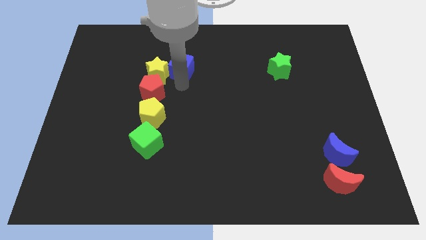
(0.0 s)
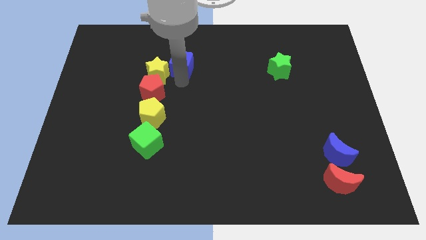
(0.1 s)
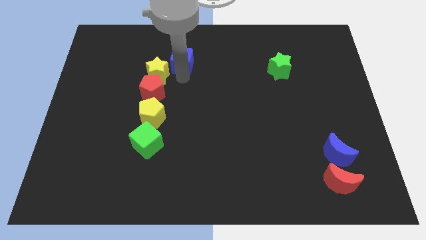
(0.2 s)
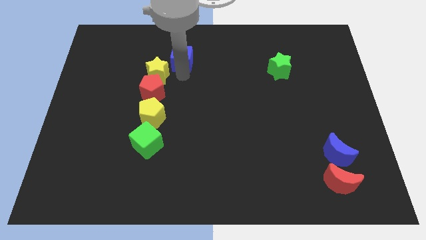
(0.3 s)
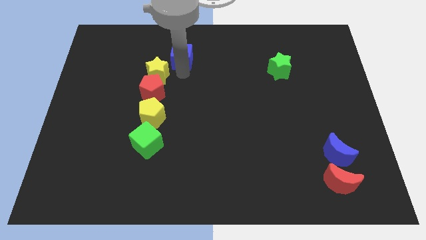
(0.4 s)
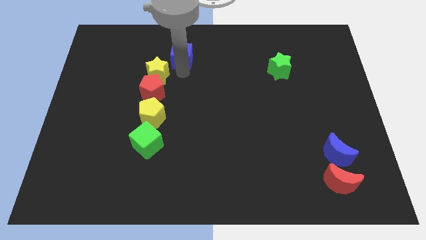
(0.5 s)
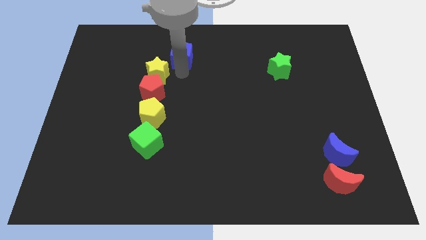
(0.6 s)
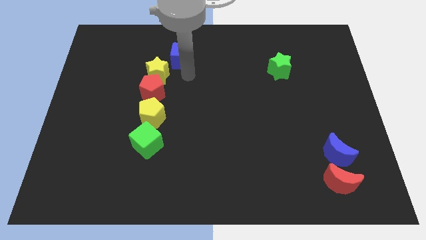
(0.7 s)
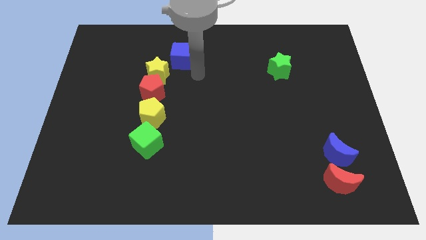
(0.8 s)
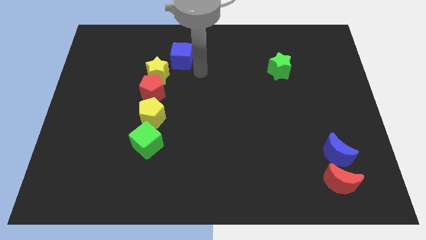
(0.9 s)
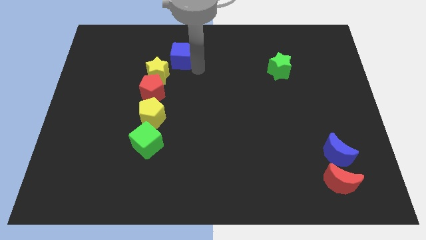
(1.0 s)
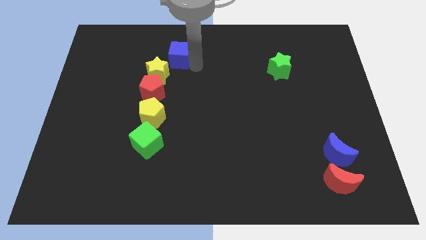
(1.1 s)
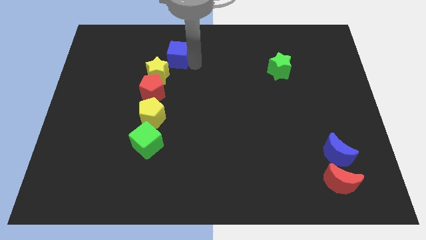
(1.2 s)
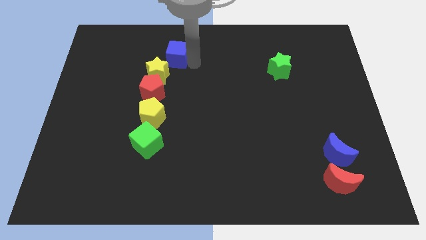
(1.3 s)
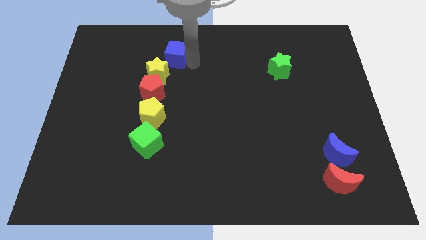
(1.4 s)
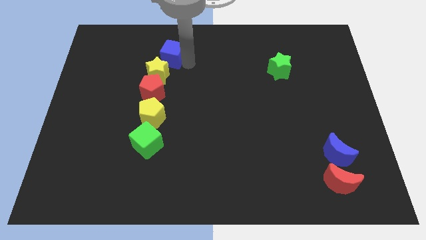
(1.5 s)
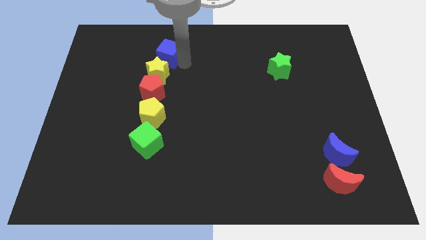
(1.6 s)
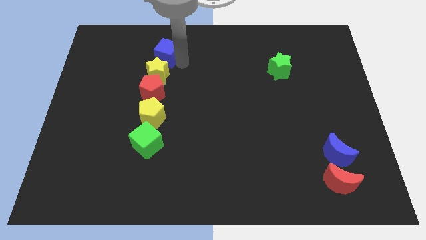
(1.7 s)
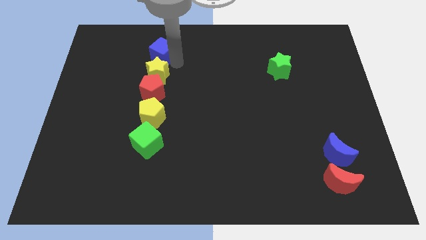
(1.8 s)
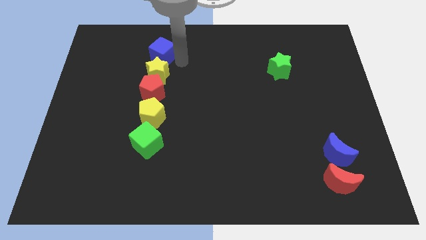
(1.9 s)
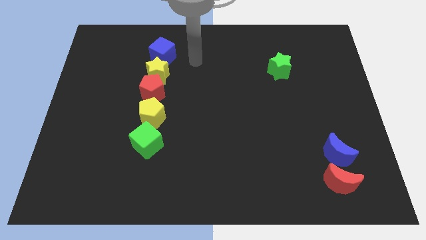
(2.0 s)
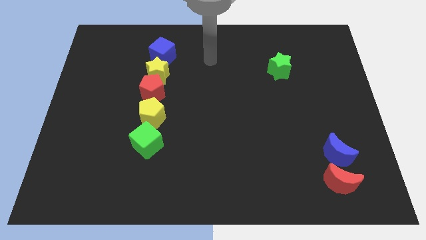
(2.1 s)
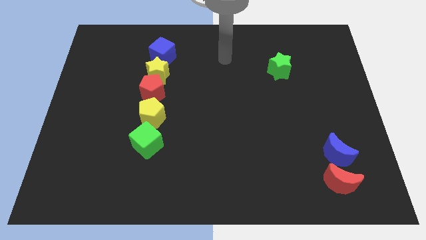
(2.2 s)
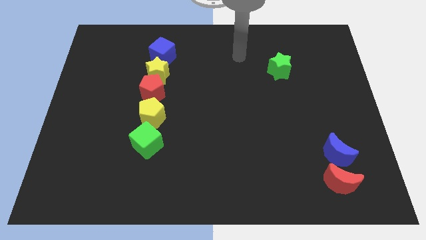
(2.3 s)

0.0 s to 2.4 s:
move the blue cube above the yellow star

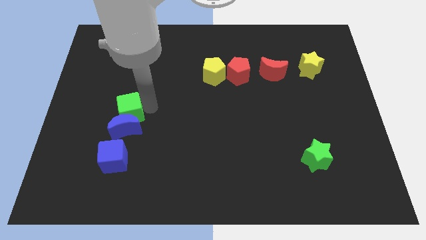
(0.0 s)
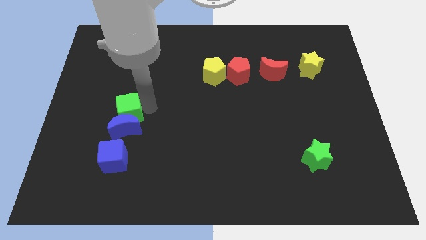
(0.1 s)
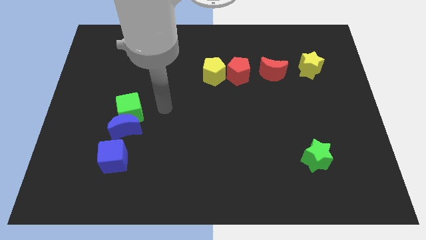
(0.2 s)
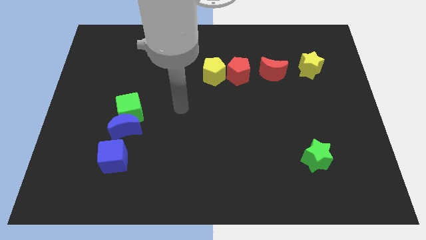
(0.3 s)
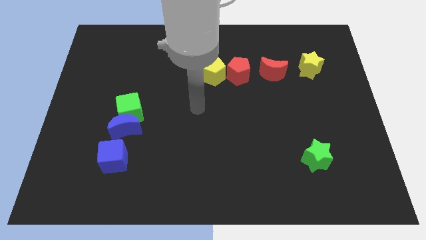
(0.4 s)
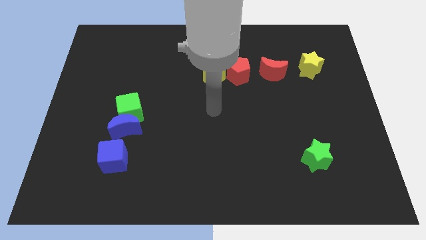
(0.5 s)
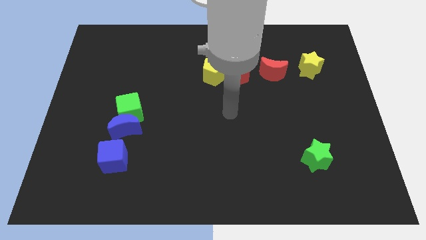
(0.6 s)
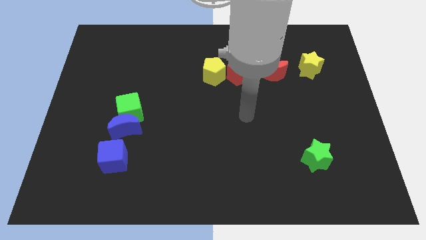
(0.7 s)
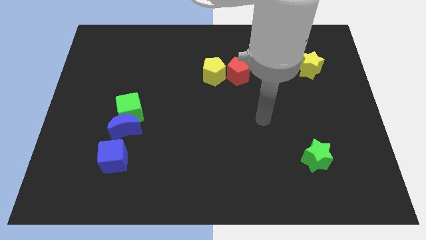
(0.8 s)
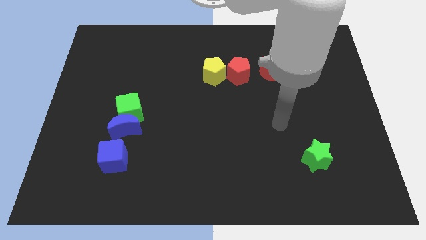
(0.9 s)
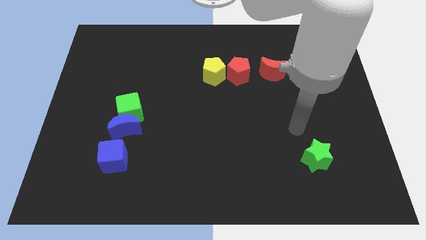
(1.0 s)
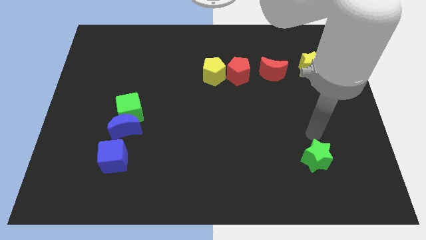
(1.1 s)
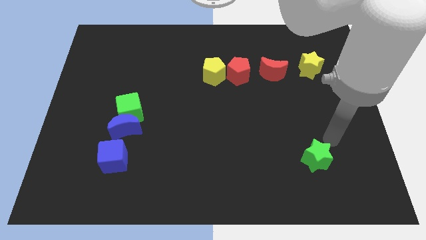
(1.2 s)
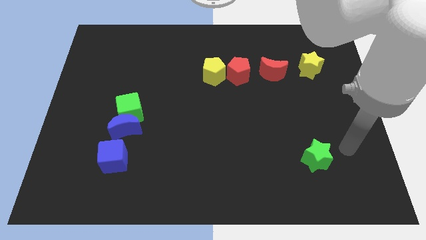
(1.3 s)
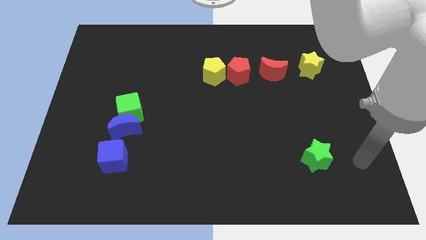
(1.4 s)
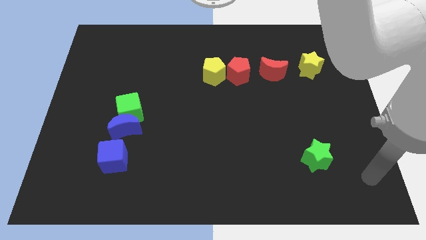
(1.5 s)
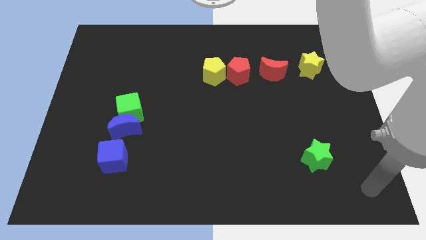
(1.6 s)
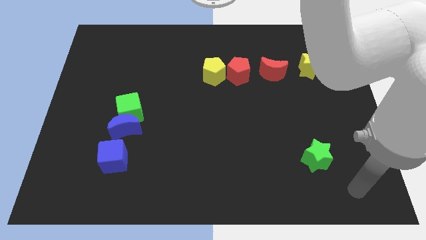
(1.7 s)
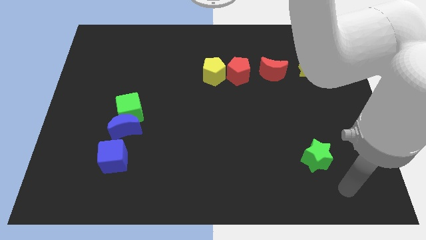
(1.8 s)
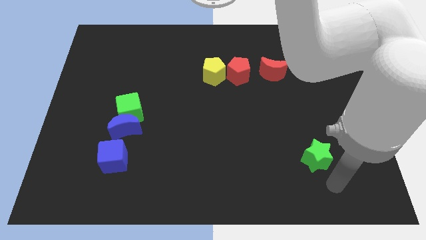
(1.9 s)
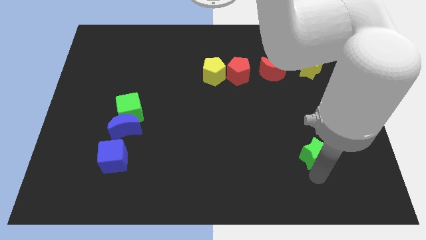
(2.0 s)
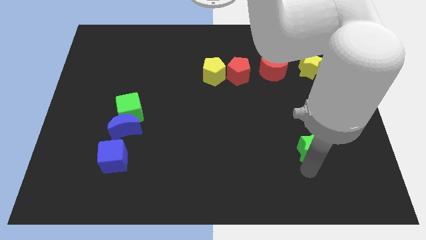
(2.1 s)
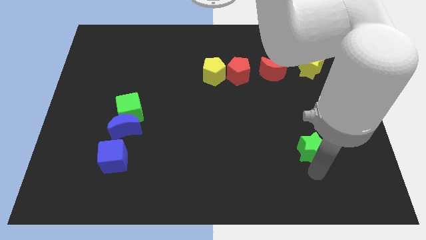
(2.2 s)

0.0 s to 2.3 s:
move the arm around the green star

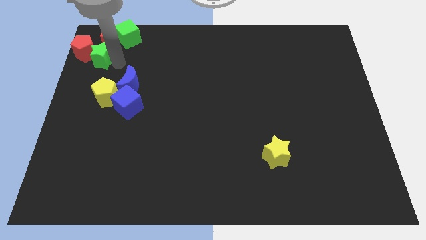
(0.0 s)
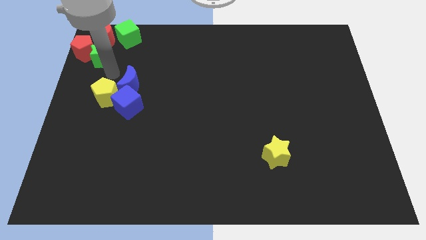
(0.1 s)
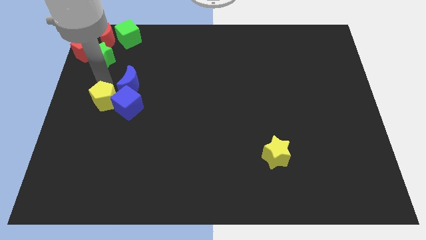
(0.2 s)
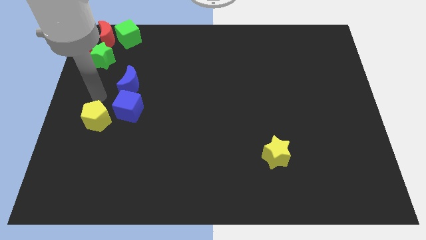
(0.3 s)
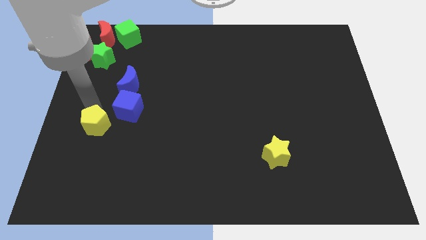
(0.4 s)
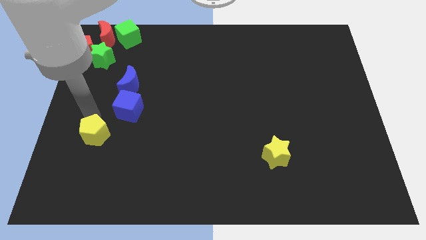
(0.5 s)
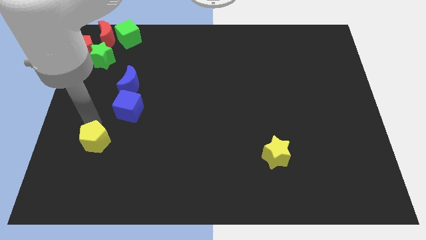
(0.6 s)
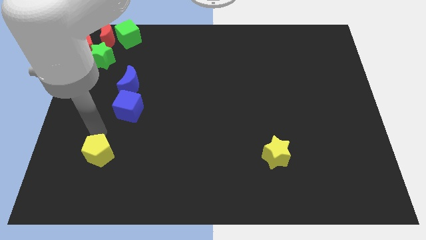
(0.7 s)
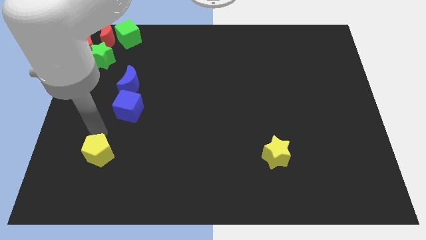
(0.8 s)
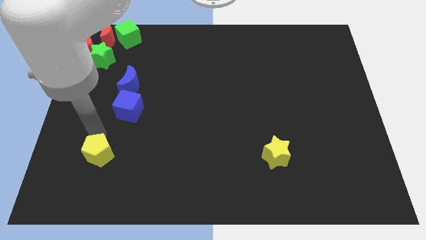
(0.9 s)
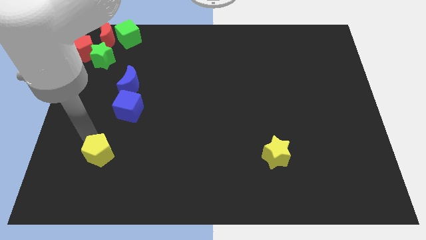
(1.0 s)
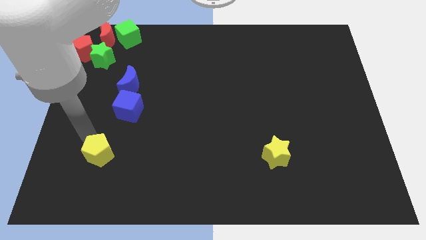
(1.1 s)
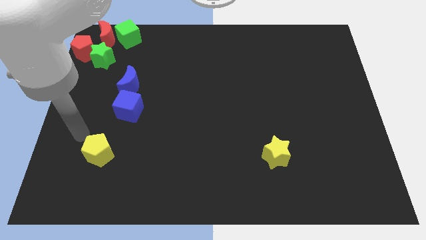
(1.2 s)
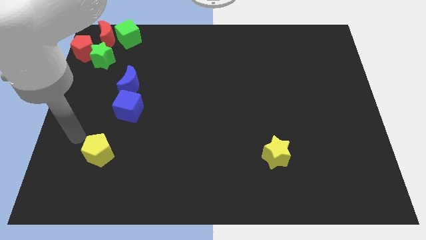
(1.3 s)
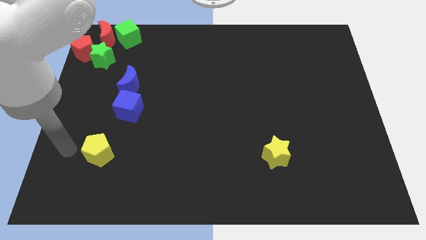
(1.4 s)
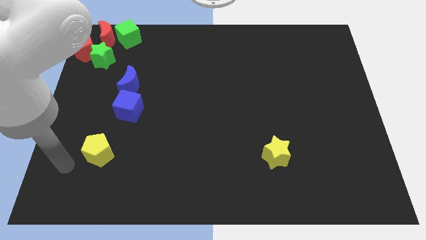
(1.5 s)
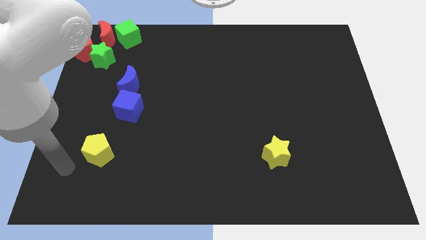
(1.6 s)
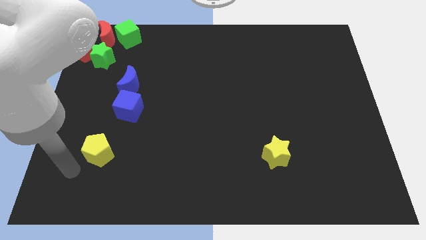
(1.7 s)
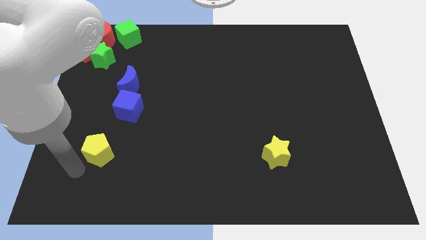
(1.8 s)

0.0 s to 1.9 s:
move away from the green star

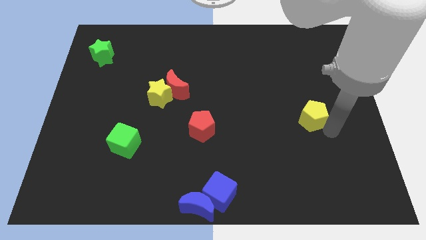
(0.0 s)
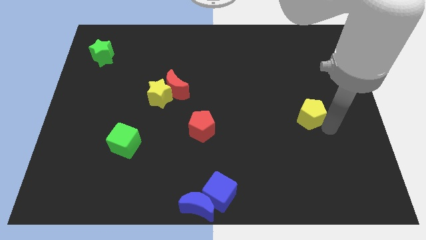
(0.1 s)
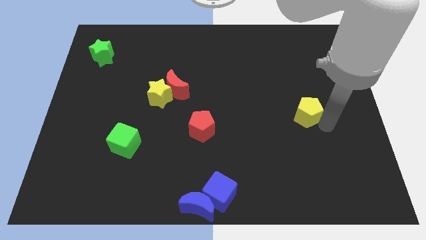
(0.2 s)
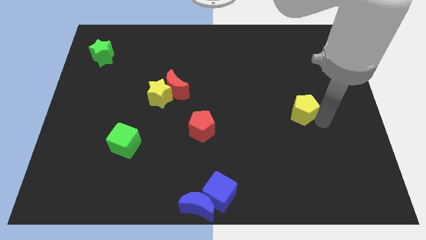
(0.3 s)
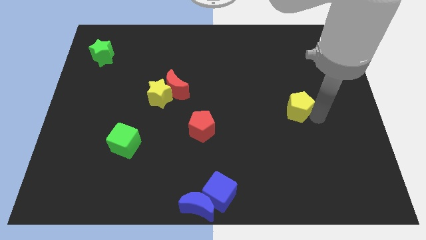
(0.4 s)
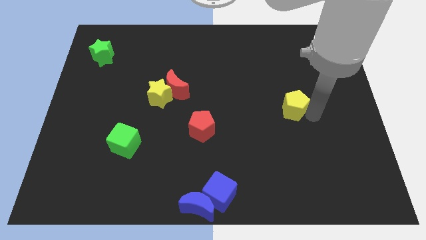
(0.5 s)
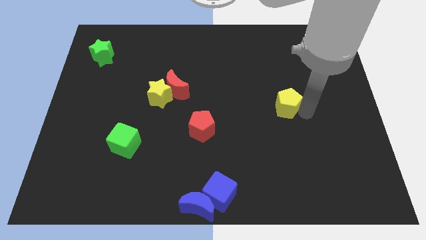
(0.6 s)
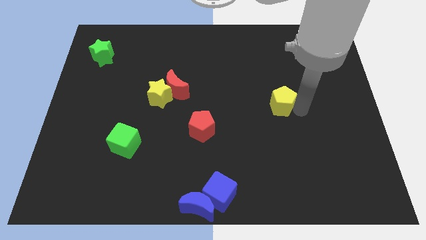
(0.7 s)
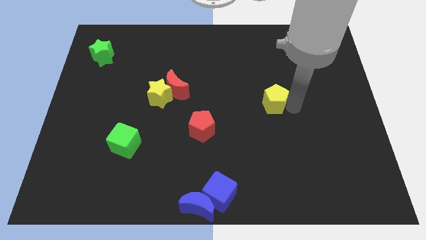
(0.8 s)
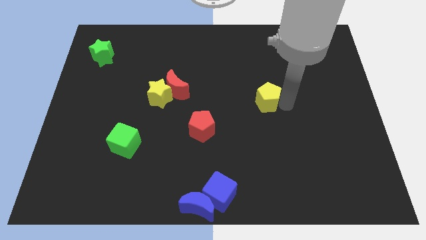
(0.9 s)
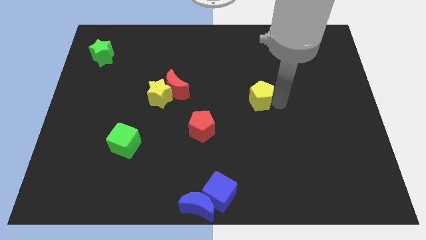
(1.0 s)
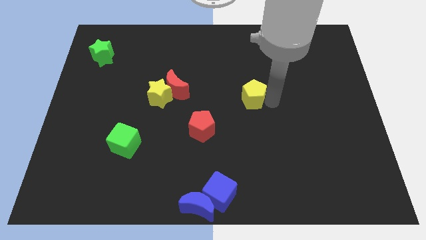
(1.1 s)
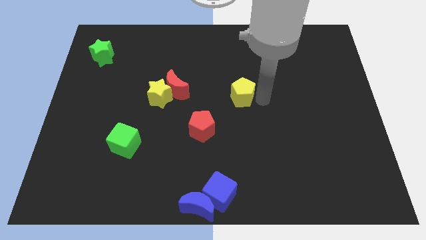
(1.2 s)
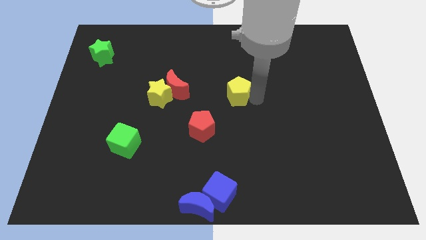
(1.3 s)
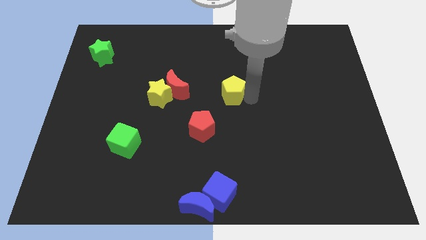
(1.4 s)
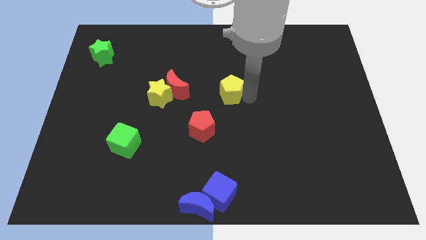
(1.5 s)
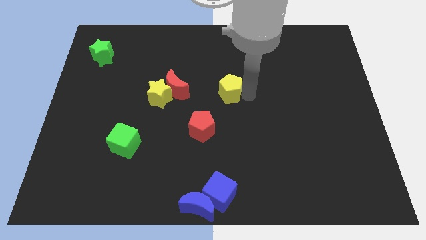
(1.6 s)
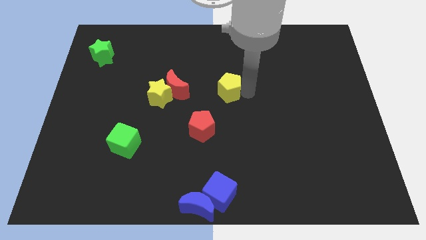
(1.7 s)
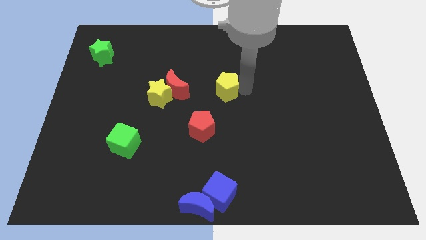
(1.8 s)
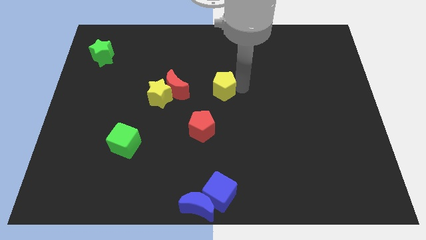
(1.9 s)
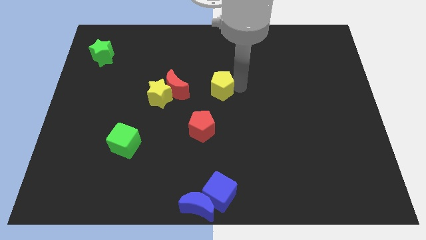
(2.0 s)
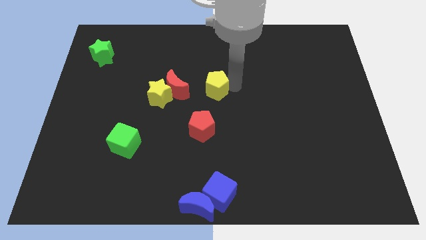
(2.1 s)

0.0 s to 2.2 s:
move the yellow pentagon to the center of the board
